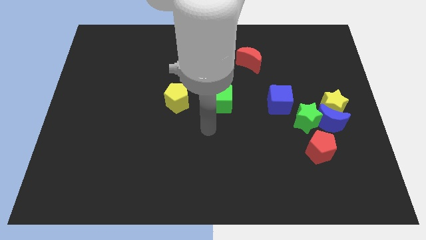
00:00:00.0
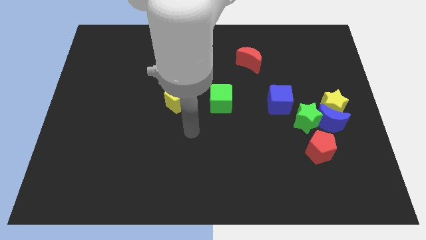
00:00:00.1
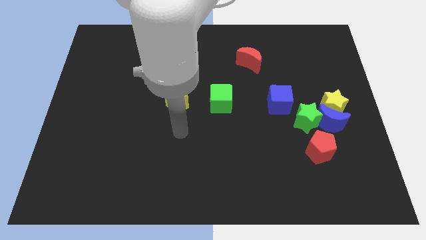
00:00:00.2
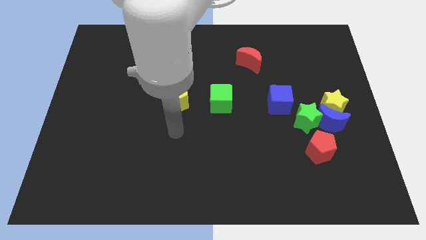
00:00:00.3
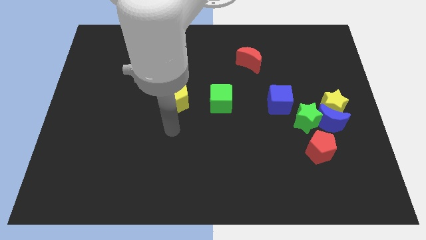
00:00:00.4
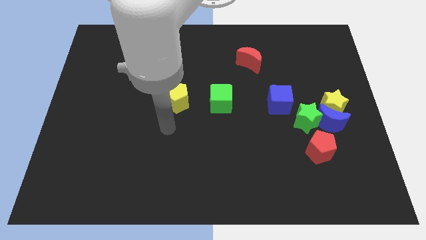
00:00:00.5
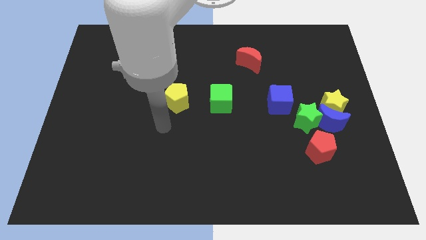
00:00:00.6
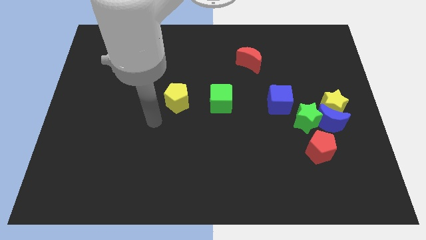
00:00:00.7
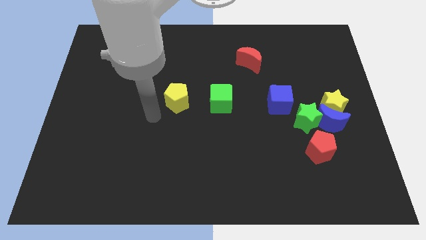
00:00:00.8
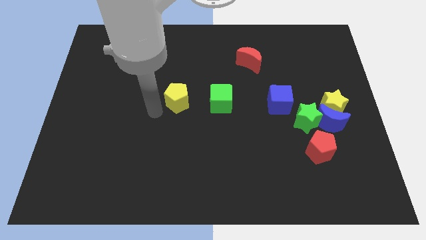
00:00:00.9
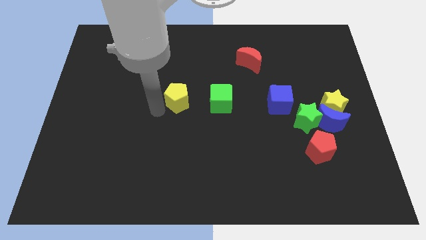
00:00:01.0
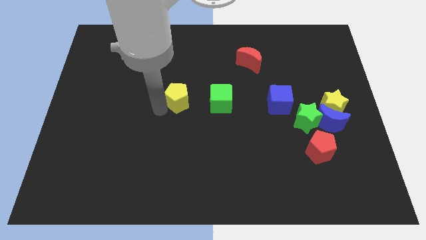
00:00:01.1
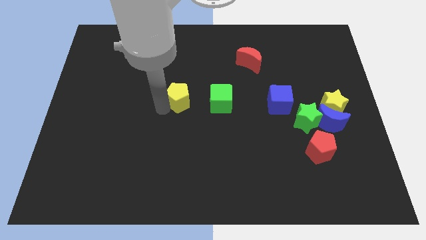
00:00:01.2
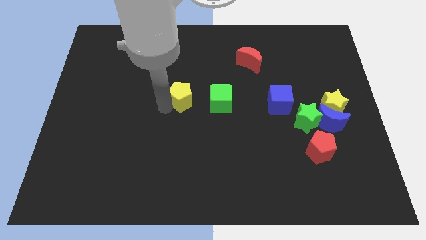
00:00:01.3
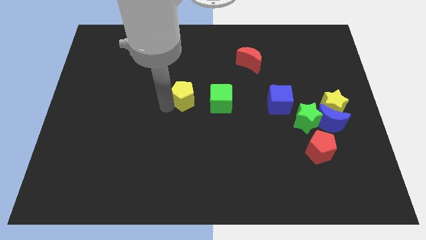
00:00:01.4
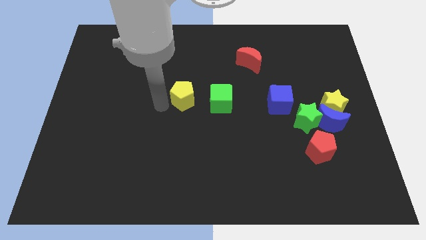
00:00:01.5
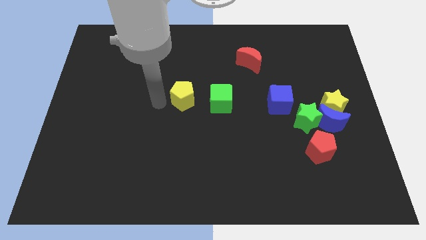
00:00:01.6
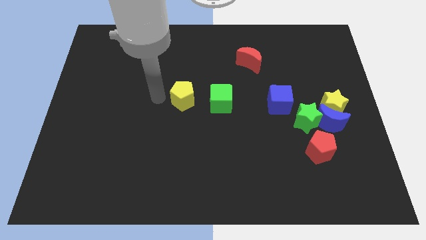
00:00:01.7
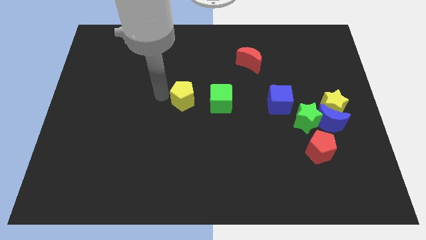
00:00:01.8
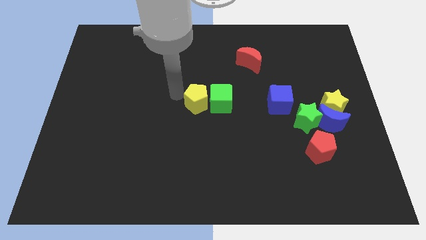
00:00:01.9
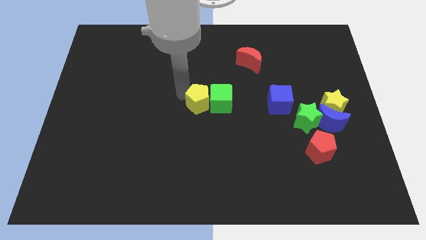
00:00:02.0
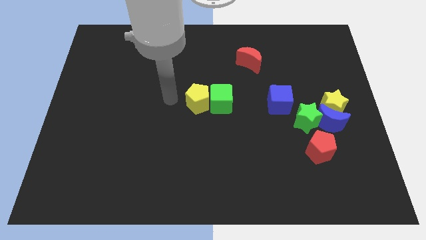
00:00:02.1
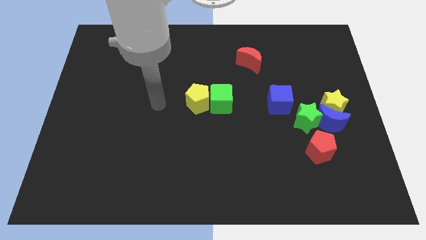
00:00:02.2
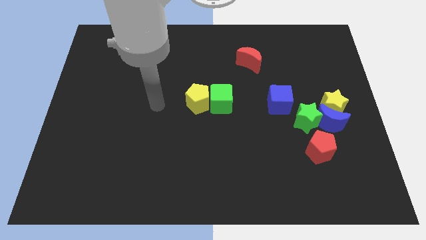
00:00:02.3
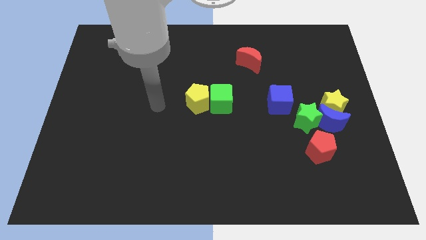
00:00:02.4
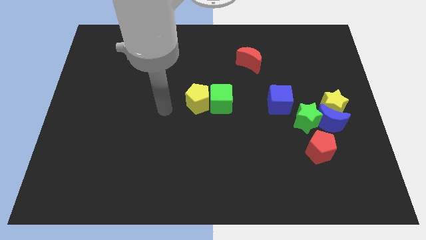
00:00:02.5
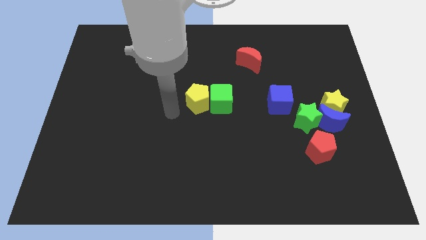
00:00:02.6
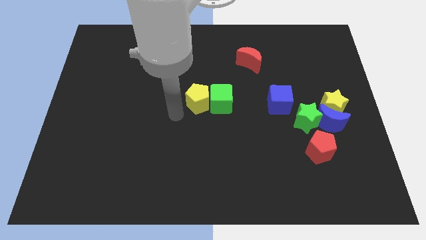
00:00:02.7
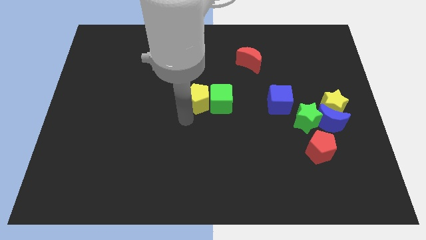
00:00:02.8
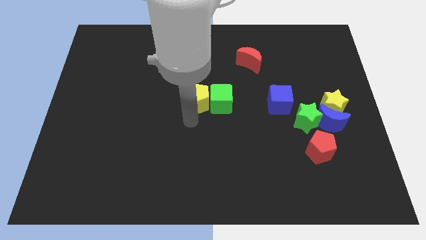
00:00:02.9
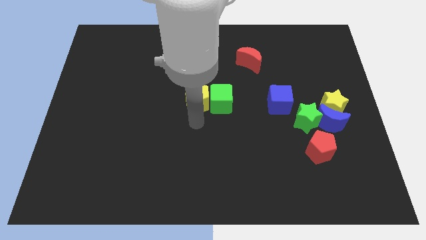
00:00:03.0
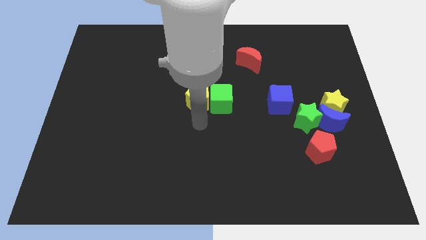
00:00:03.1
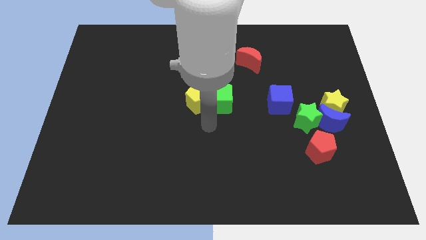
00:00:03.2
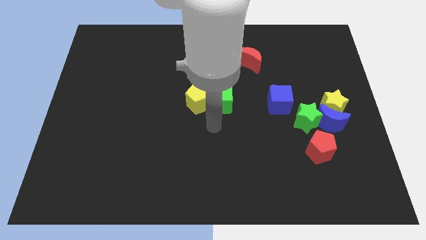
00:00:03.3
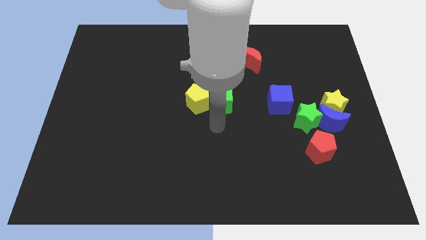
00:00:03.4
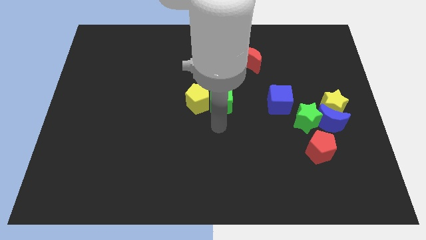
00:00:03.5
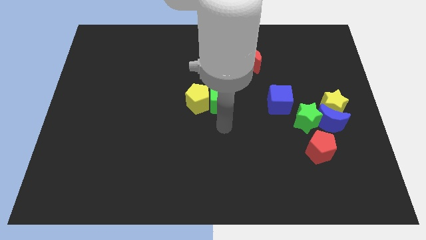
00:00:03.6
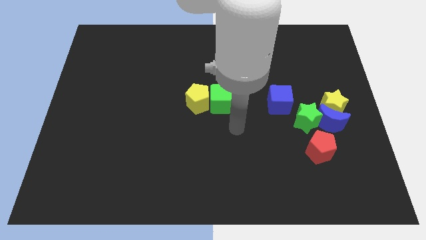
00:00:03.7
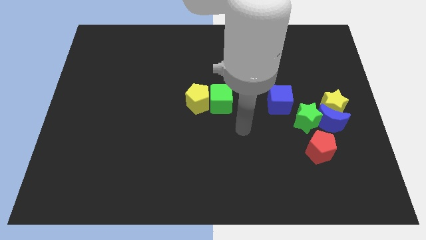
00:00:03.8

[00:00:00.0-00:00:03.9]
push the yellow pentagon to the left side of the green cube

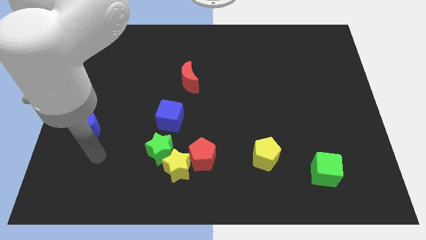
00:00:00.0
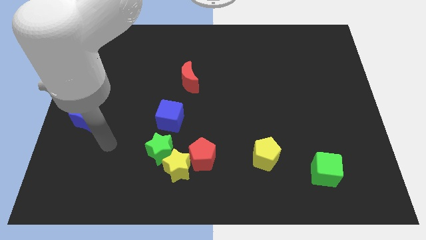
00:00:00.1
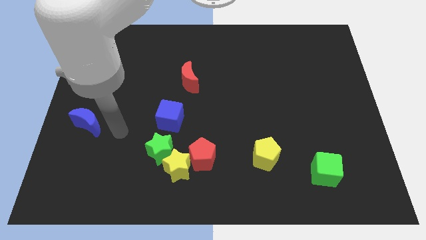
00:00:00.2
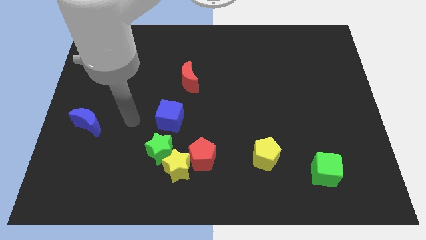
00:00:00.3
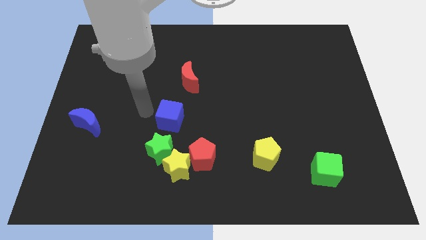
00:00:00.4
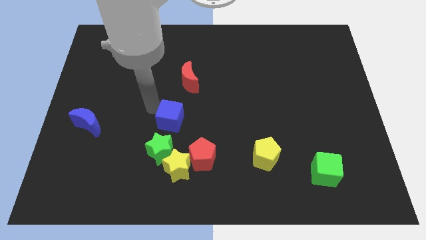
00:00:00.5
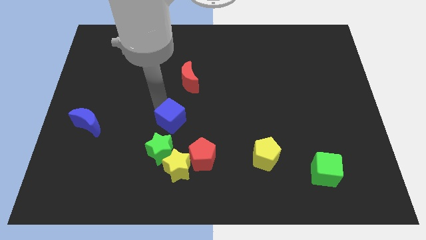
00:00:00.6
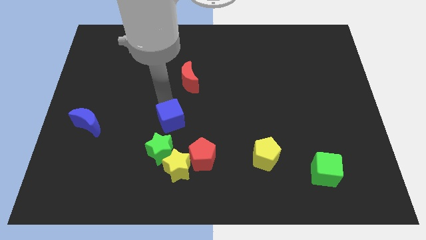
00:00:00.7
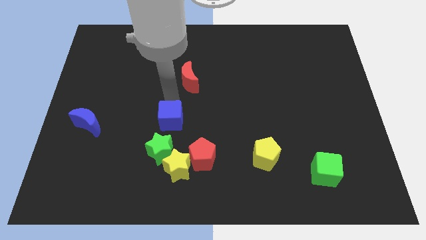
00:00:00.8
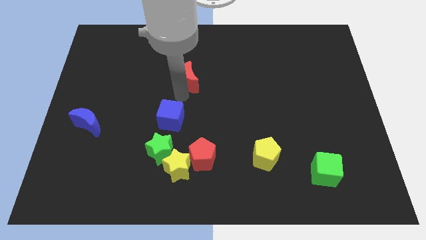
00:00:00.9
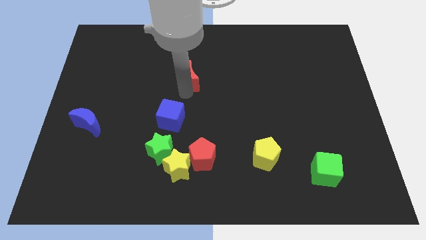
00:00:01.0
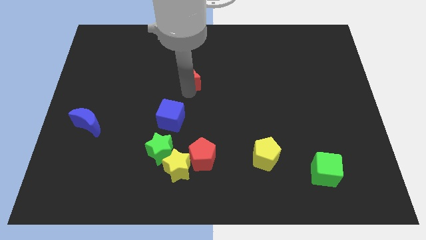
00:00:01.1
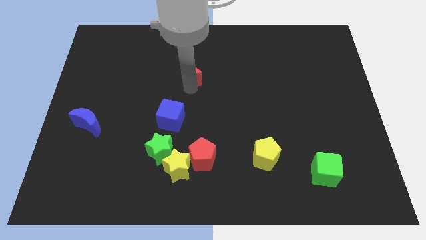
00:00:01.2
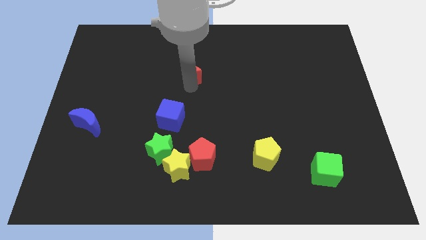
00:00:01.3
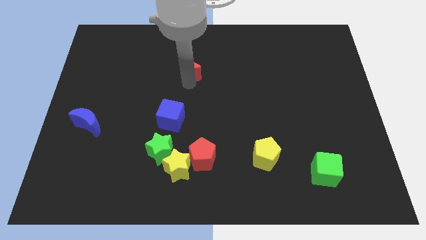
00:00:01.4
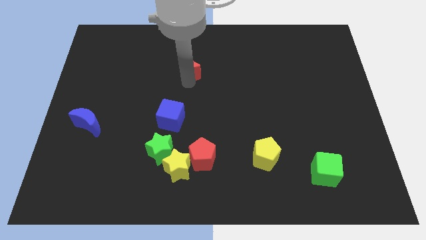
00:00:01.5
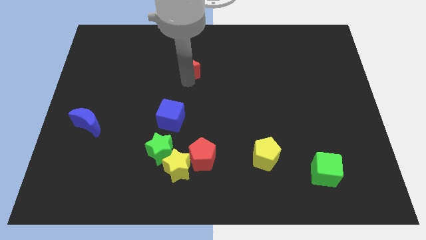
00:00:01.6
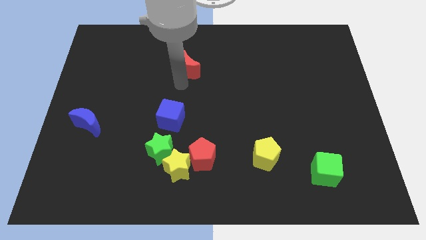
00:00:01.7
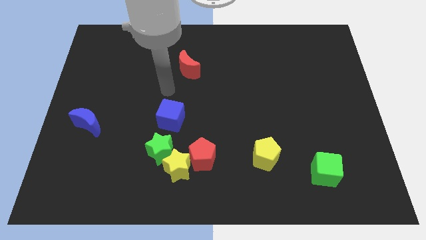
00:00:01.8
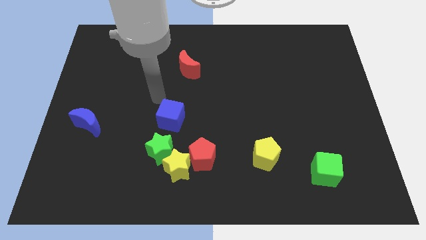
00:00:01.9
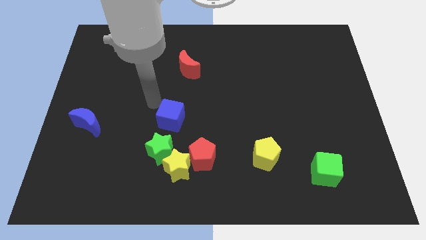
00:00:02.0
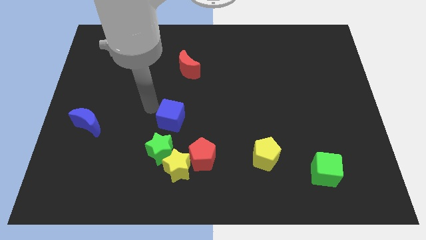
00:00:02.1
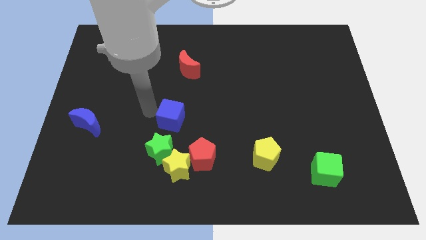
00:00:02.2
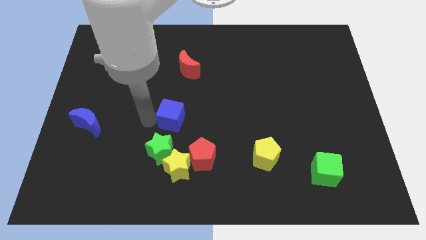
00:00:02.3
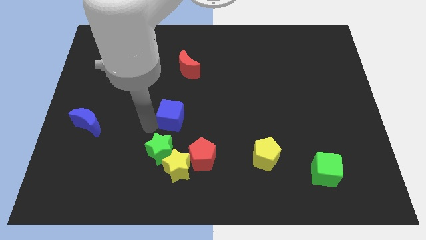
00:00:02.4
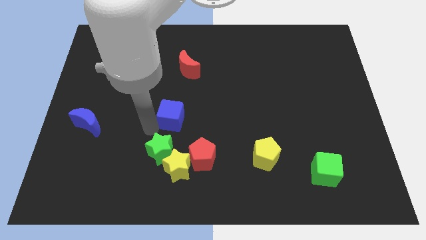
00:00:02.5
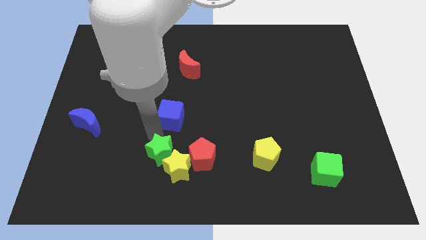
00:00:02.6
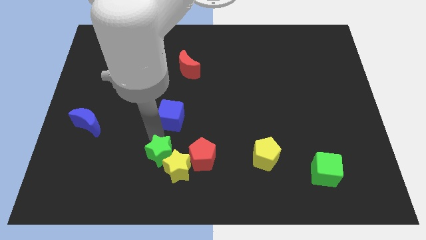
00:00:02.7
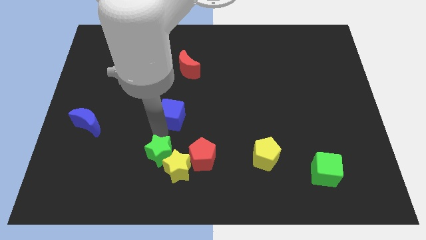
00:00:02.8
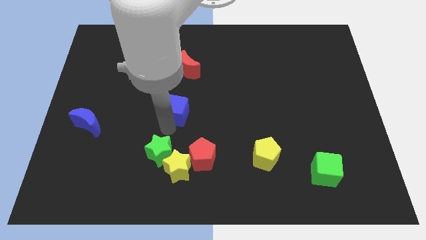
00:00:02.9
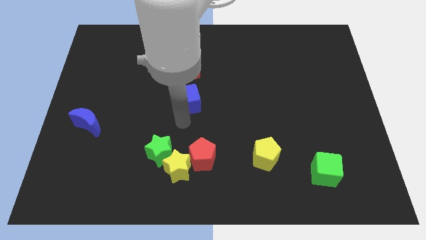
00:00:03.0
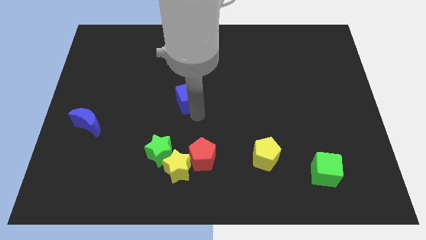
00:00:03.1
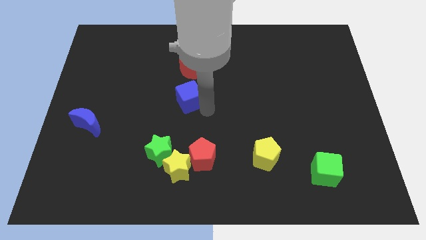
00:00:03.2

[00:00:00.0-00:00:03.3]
placethe blue cube below the red moon

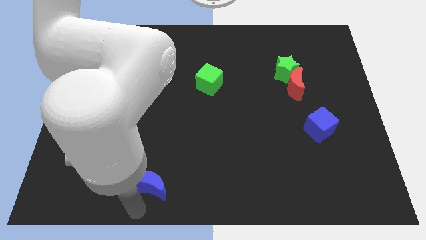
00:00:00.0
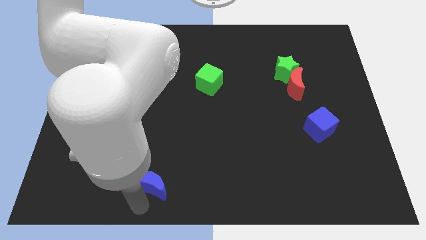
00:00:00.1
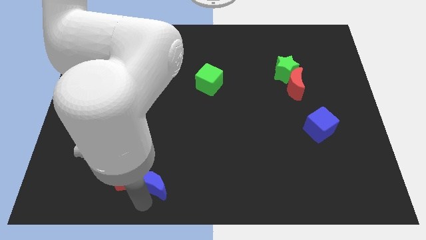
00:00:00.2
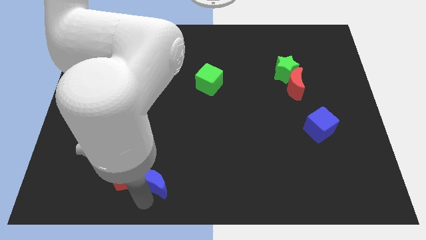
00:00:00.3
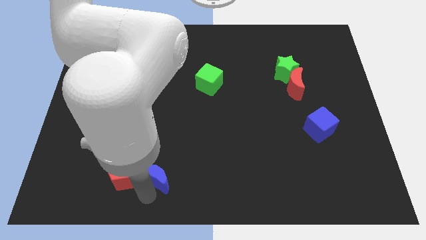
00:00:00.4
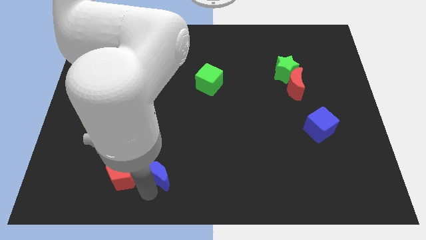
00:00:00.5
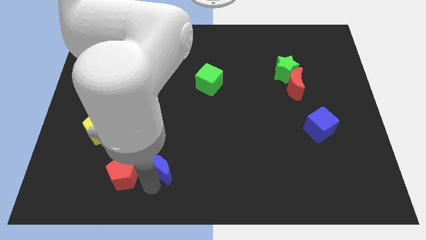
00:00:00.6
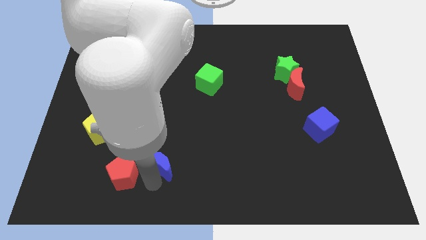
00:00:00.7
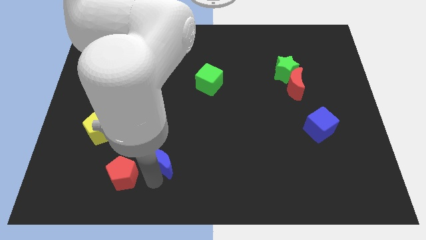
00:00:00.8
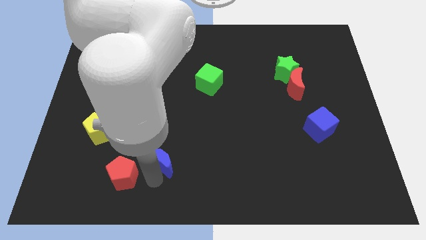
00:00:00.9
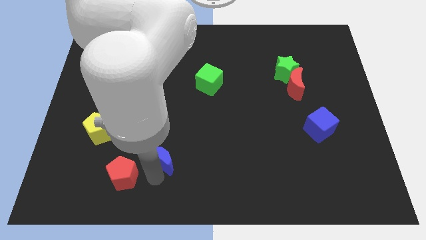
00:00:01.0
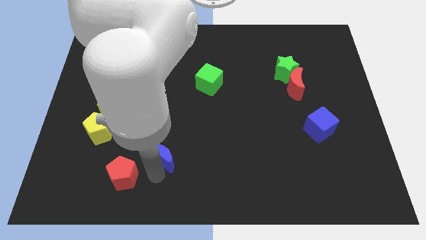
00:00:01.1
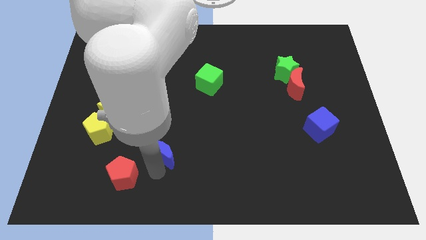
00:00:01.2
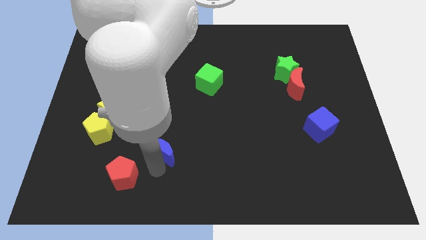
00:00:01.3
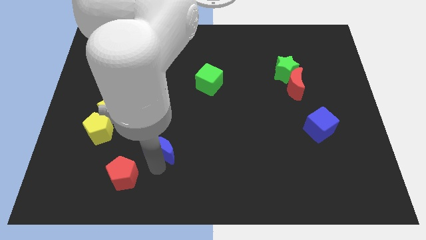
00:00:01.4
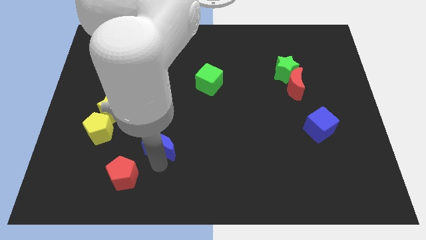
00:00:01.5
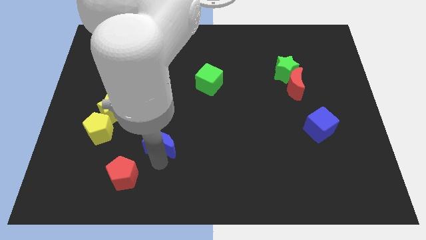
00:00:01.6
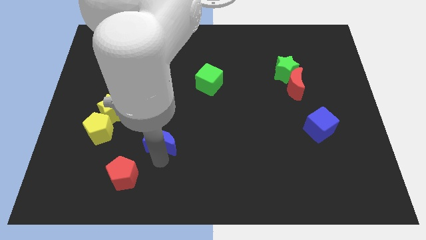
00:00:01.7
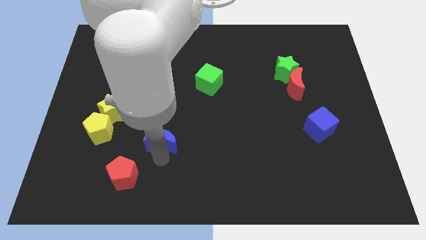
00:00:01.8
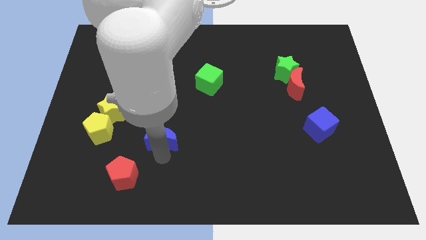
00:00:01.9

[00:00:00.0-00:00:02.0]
drag the blue crescent diagonally on the top right side of the red pentagon
